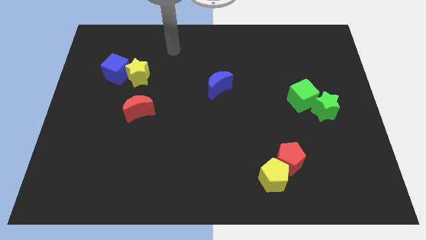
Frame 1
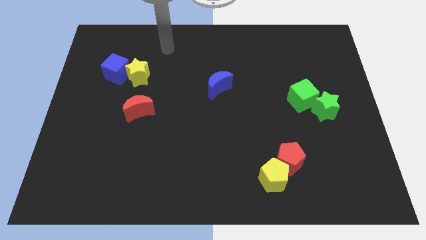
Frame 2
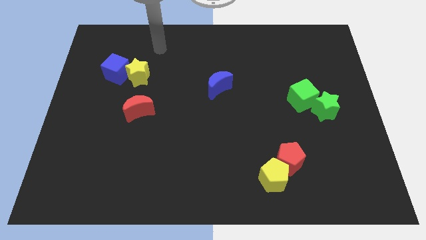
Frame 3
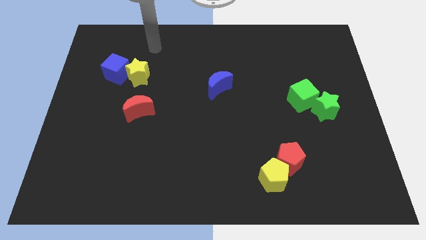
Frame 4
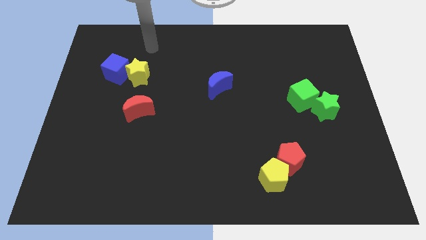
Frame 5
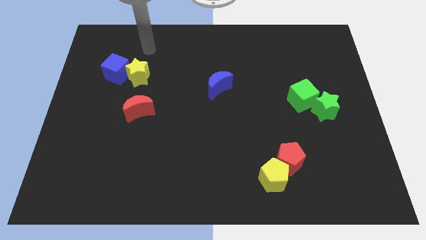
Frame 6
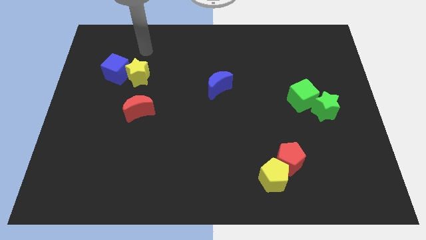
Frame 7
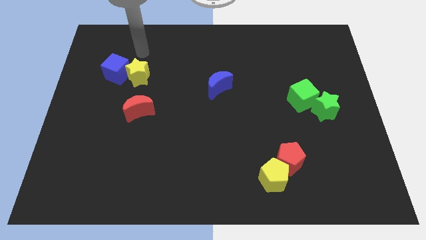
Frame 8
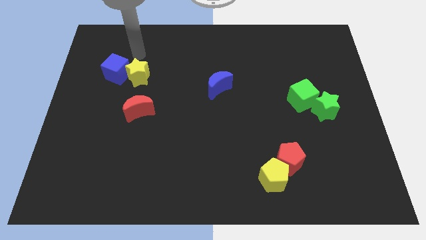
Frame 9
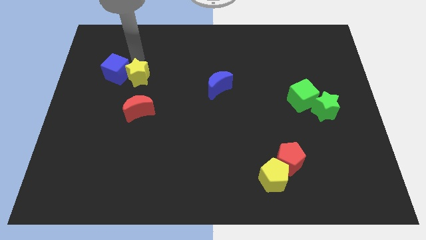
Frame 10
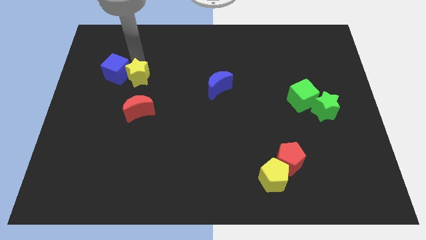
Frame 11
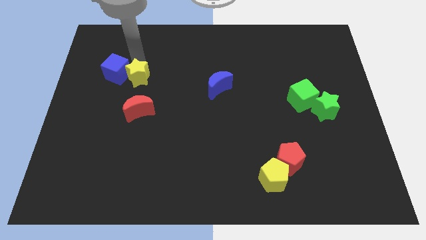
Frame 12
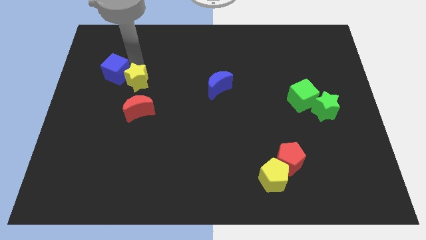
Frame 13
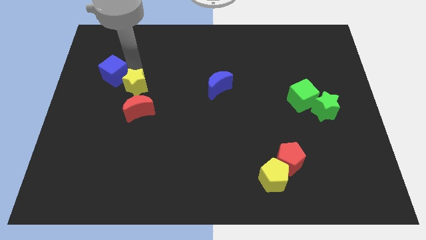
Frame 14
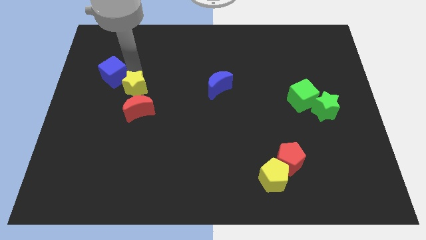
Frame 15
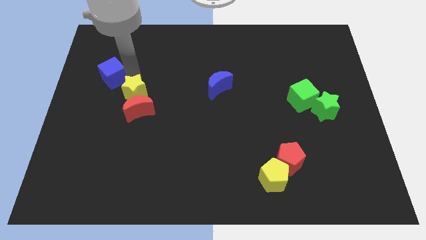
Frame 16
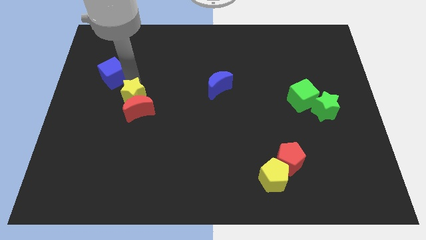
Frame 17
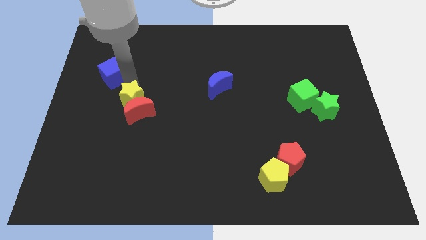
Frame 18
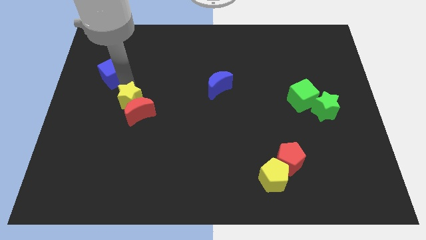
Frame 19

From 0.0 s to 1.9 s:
push the yellow star into red crescent

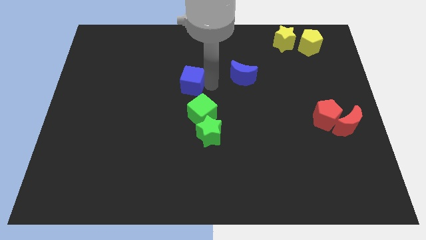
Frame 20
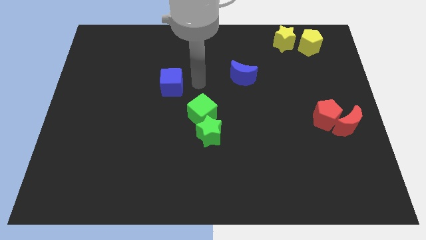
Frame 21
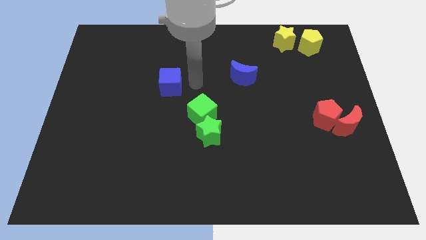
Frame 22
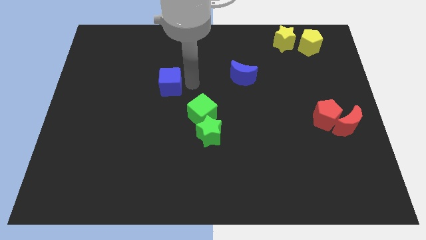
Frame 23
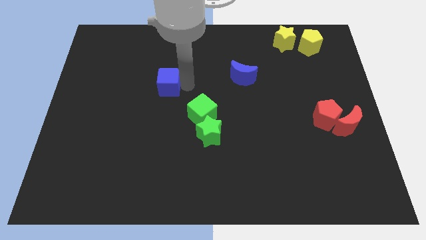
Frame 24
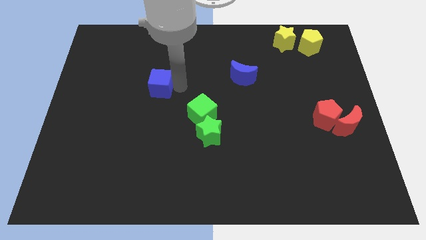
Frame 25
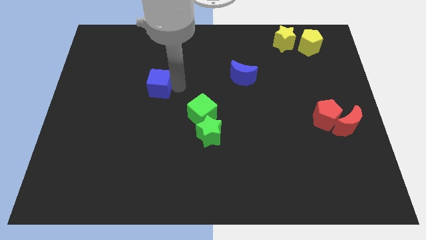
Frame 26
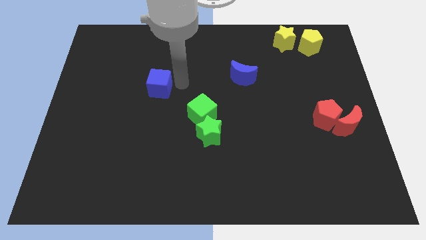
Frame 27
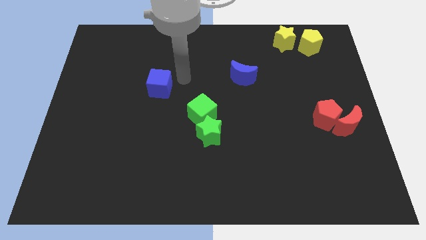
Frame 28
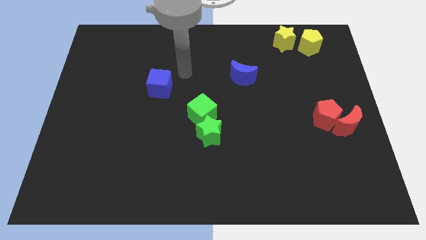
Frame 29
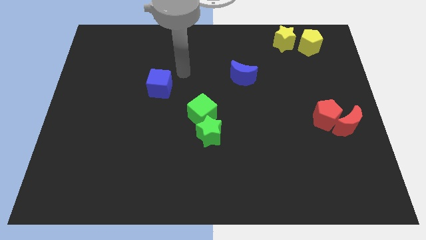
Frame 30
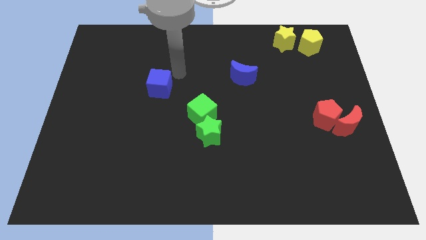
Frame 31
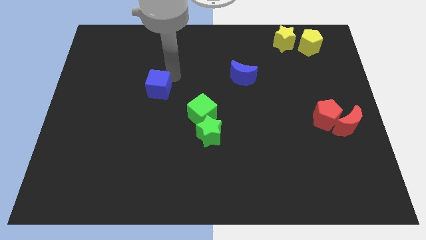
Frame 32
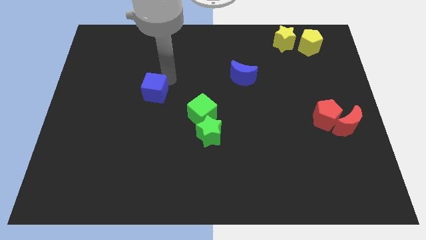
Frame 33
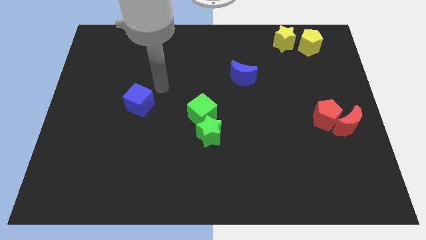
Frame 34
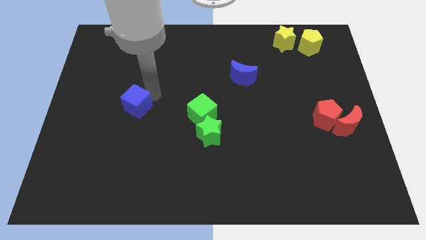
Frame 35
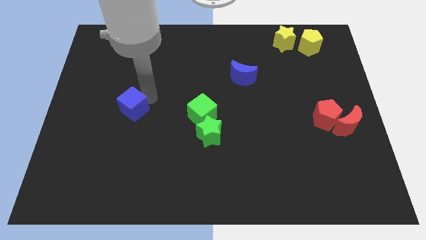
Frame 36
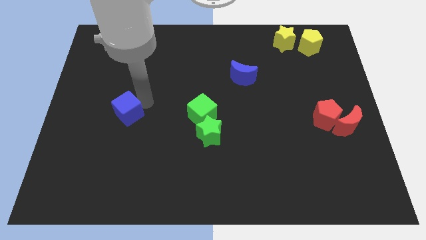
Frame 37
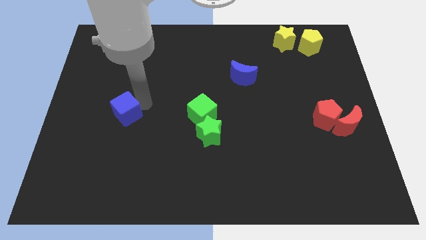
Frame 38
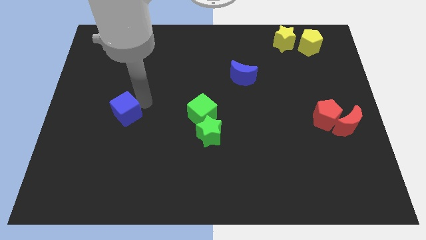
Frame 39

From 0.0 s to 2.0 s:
move the blue cube parallel to the green cube

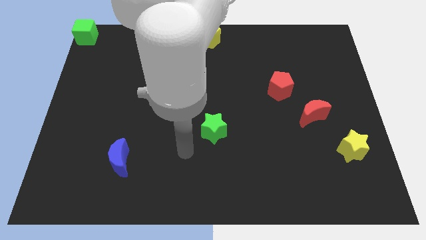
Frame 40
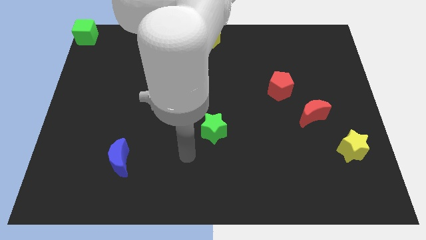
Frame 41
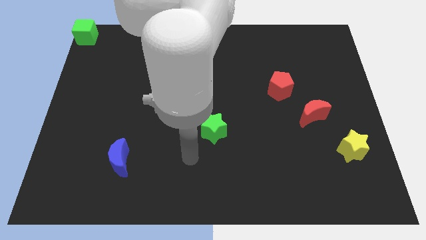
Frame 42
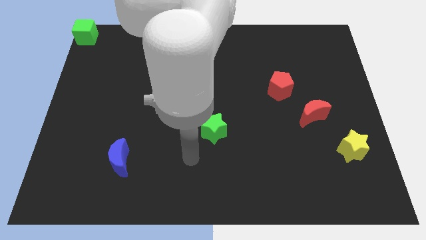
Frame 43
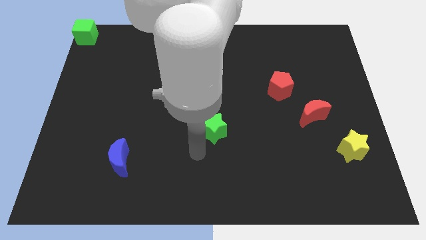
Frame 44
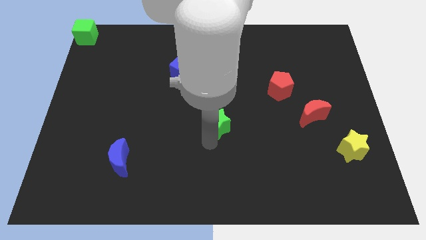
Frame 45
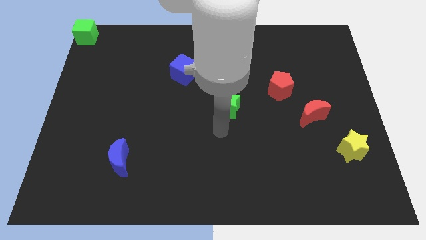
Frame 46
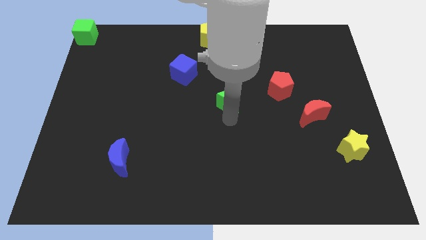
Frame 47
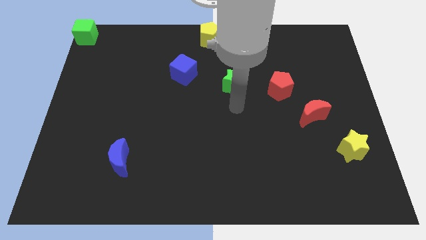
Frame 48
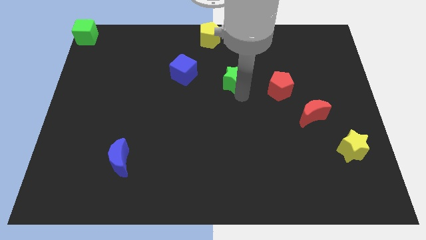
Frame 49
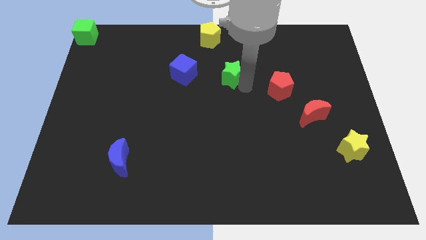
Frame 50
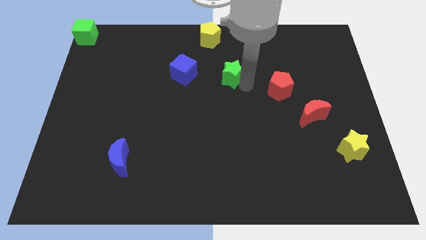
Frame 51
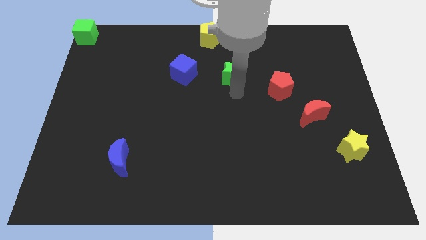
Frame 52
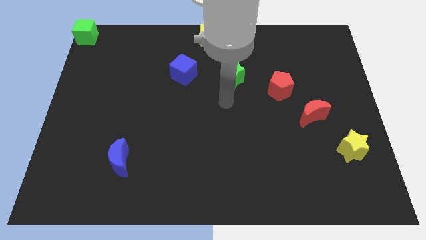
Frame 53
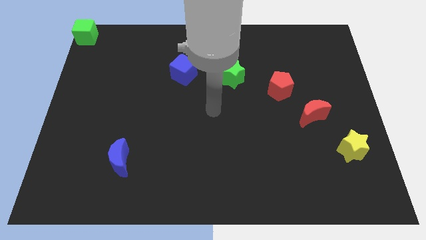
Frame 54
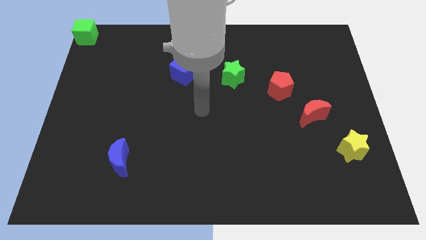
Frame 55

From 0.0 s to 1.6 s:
put the green star between the red pentagon and blue cube

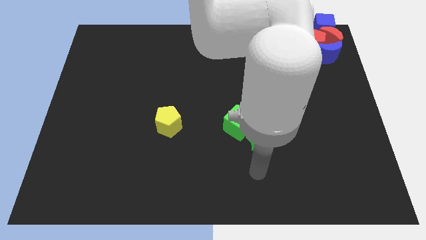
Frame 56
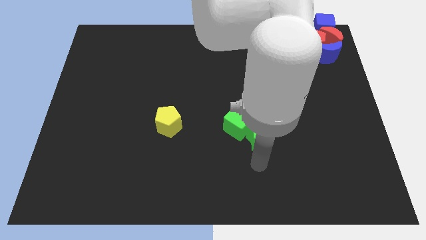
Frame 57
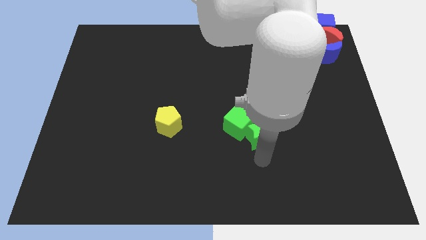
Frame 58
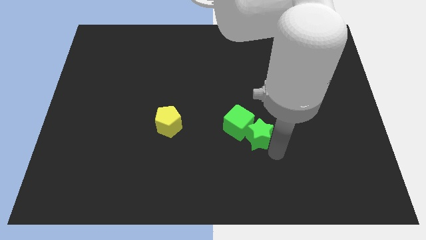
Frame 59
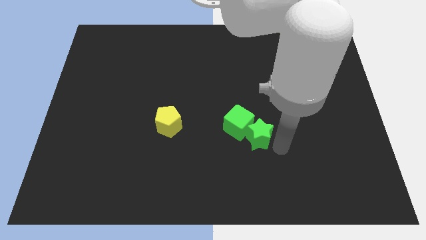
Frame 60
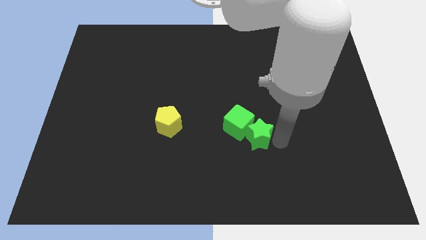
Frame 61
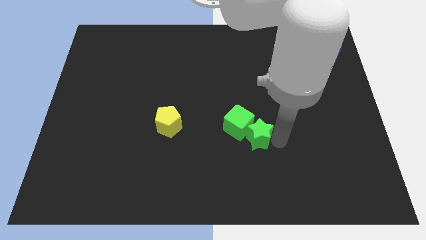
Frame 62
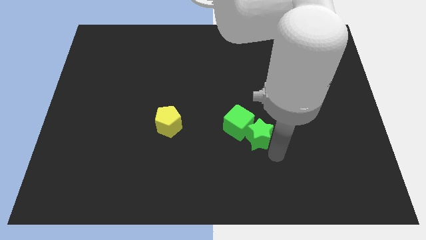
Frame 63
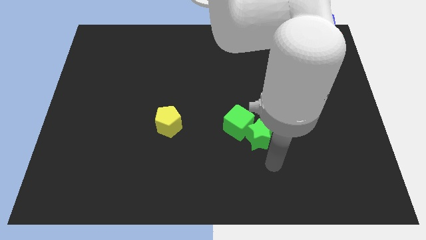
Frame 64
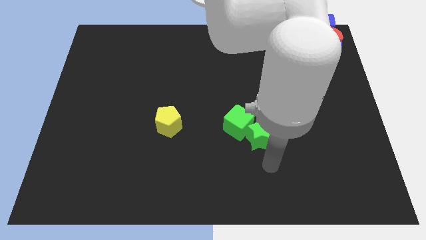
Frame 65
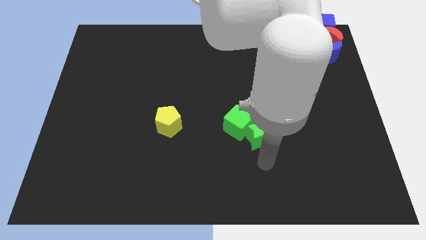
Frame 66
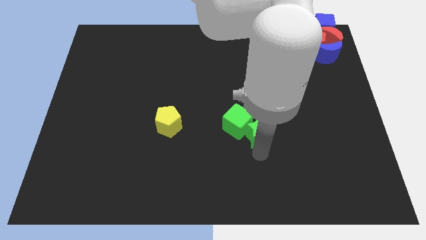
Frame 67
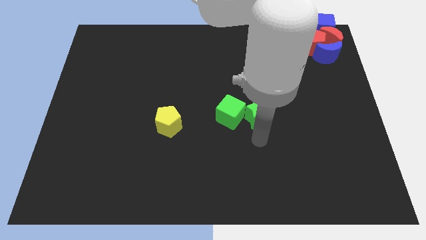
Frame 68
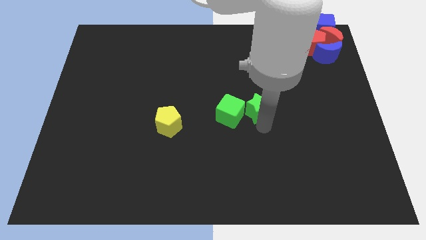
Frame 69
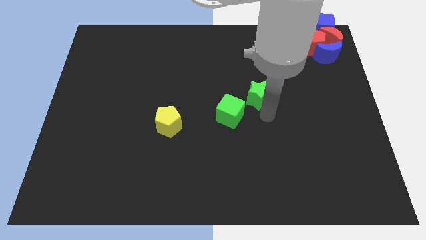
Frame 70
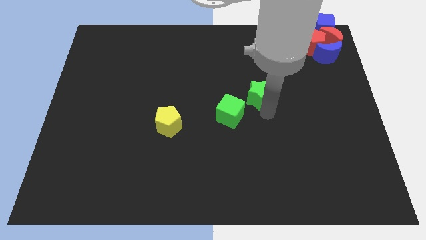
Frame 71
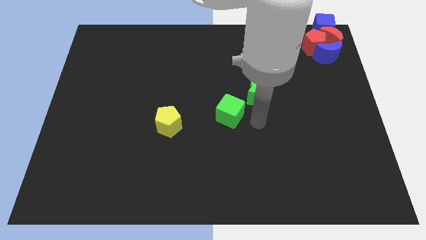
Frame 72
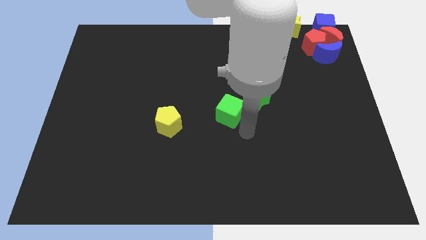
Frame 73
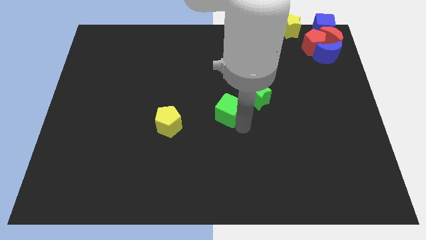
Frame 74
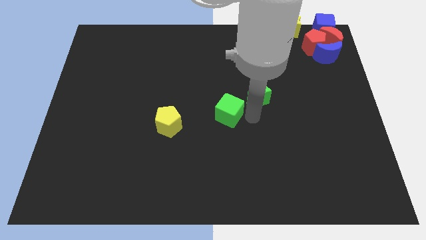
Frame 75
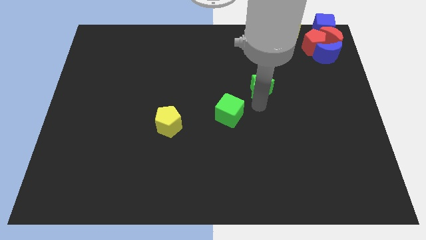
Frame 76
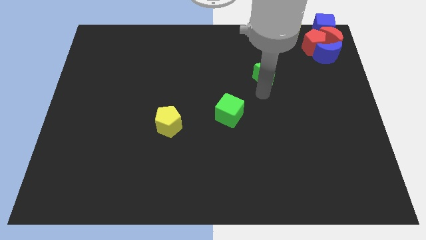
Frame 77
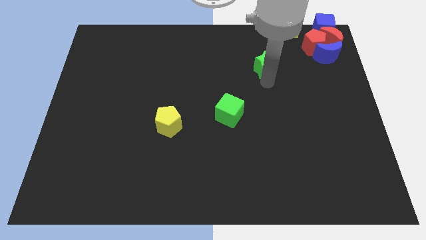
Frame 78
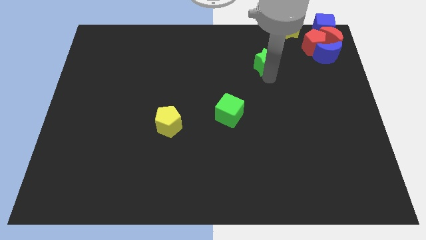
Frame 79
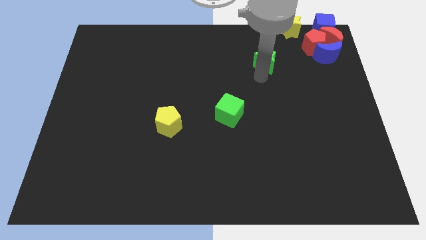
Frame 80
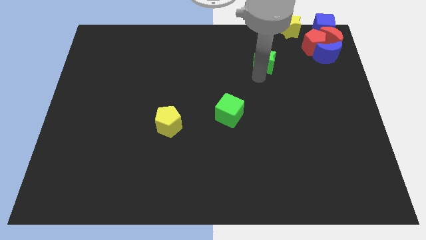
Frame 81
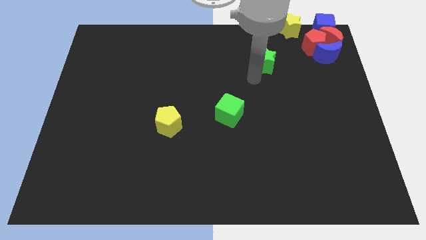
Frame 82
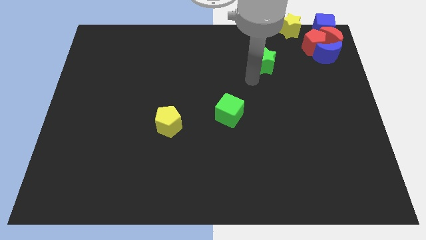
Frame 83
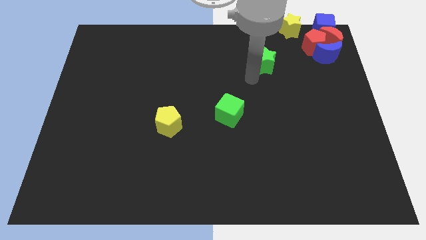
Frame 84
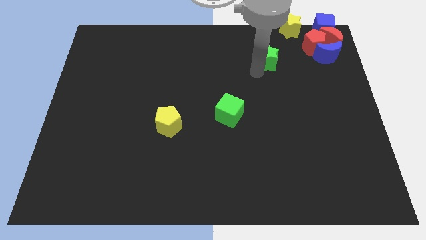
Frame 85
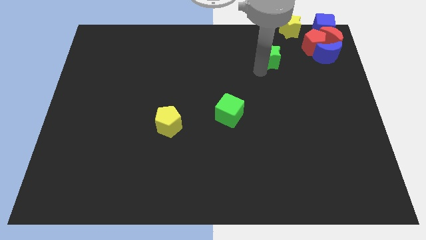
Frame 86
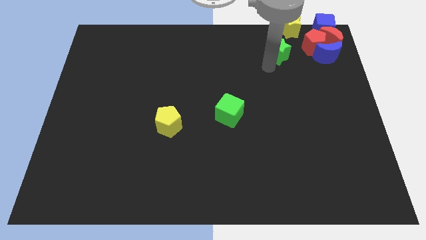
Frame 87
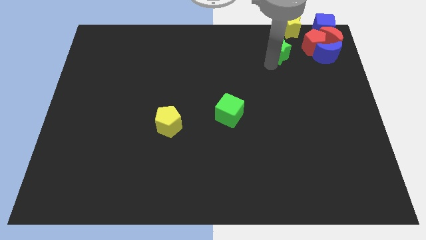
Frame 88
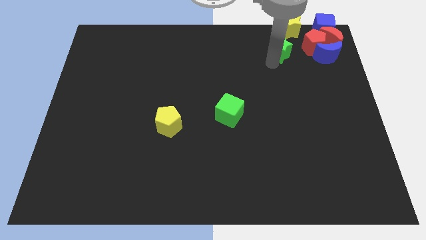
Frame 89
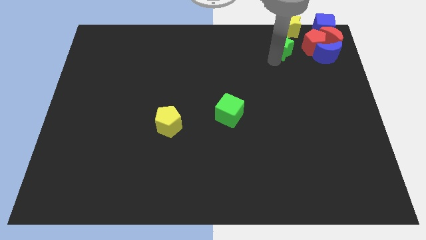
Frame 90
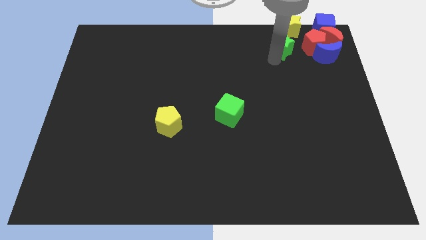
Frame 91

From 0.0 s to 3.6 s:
move green star below the yellow star
